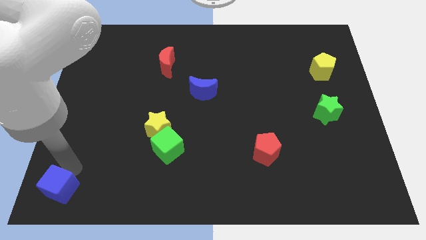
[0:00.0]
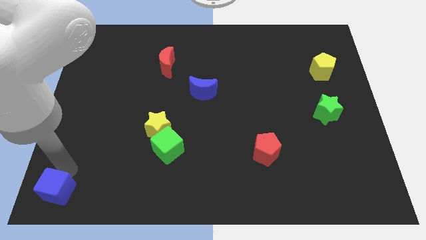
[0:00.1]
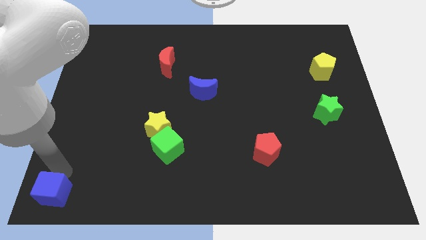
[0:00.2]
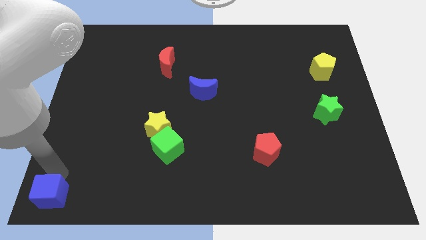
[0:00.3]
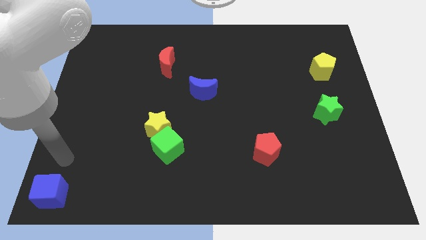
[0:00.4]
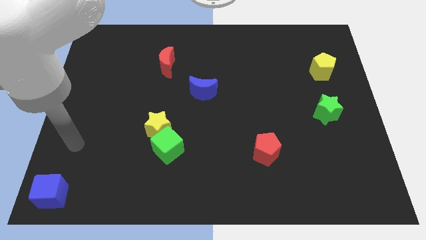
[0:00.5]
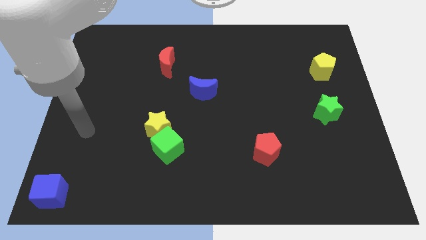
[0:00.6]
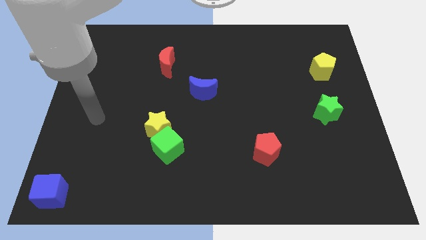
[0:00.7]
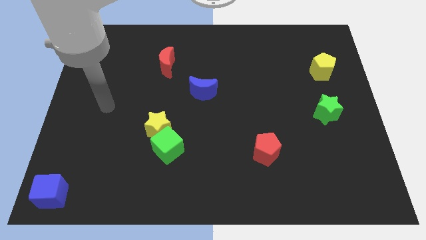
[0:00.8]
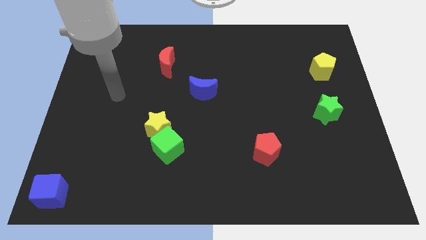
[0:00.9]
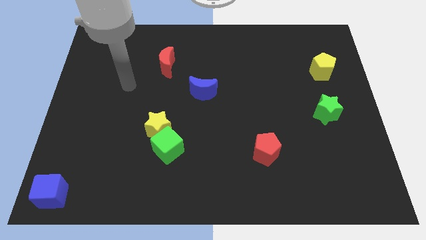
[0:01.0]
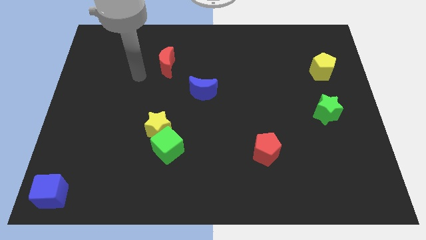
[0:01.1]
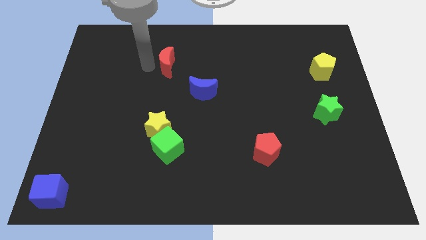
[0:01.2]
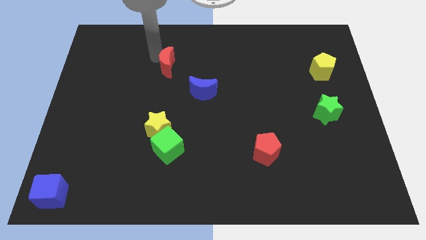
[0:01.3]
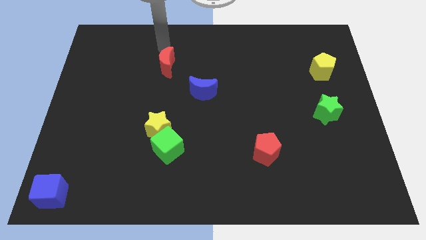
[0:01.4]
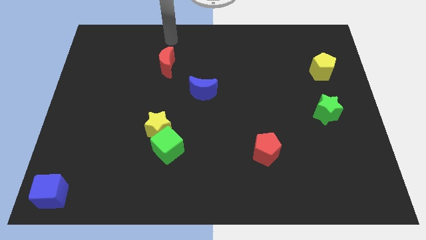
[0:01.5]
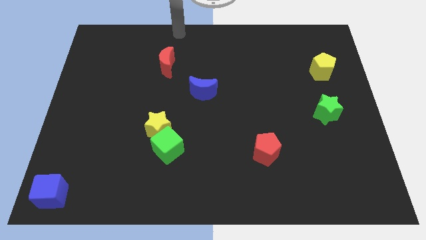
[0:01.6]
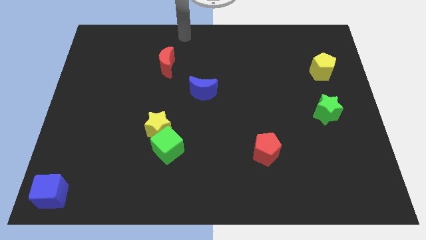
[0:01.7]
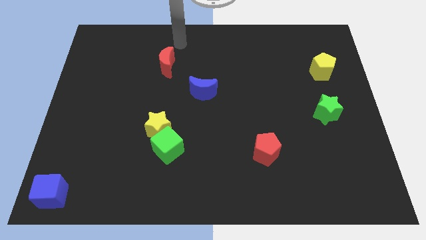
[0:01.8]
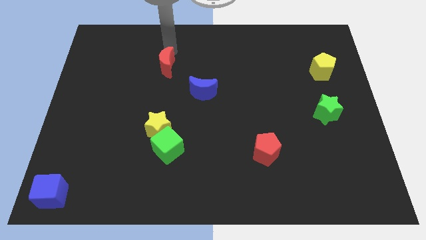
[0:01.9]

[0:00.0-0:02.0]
move your arm at the top of the red moon

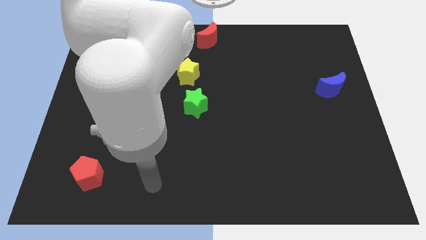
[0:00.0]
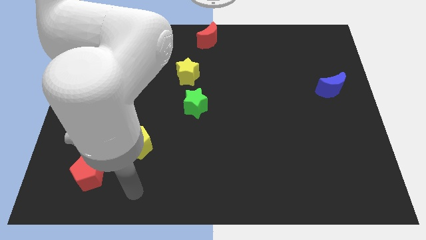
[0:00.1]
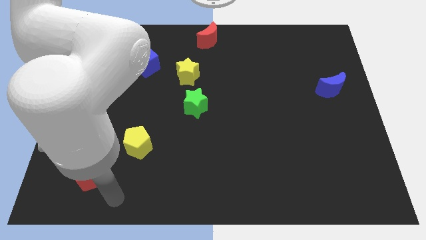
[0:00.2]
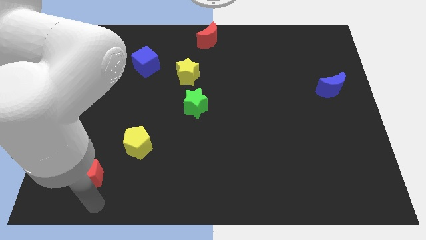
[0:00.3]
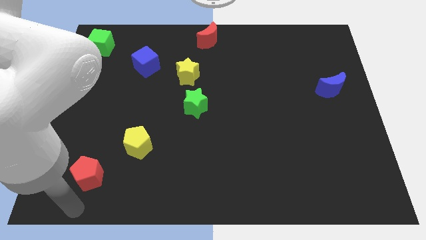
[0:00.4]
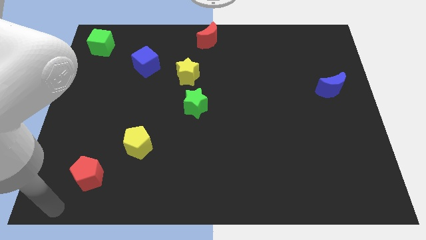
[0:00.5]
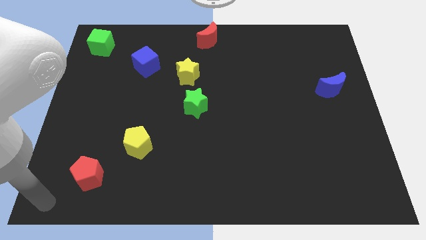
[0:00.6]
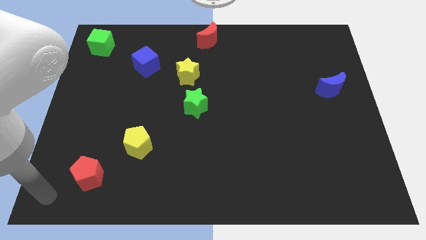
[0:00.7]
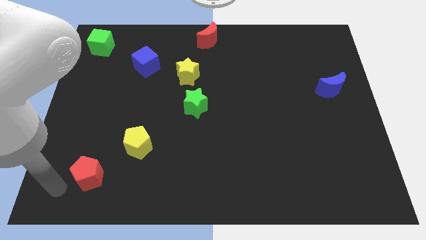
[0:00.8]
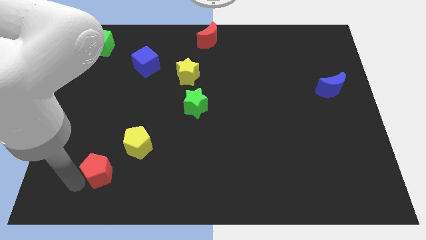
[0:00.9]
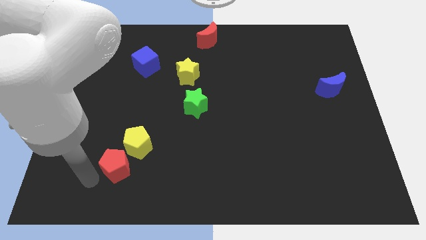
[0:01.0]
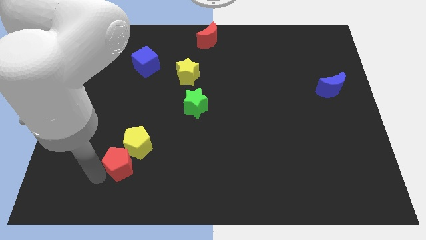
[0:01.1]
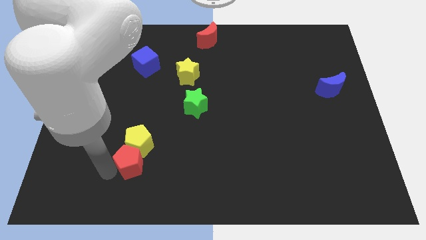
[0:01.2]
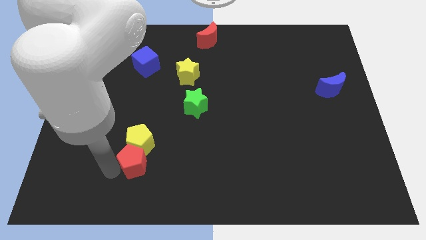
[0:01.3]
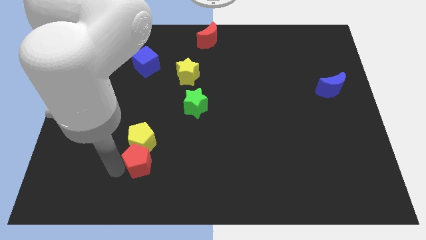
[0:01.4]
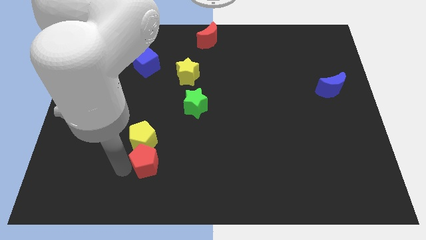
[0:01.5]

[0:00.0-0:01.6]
move the red pentagon to the bottom of the yellow pentagon

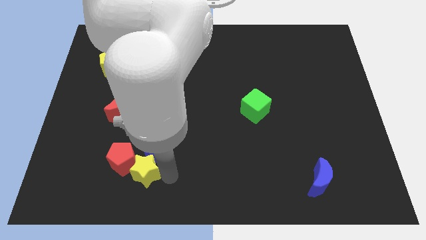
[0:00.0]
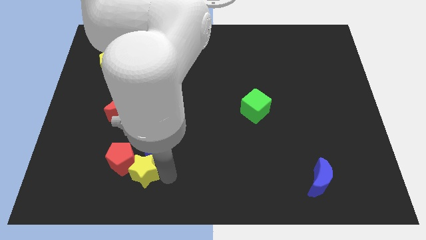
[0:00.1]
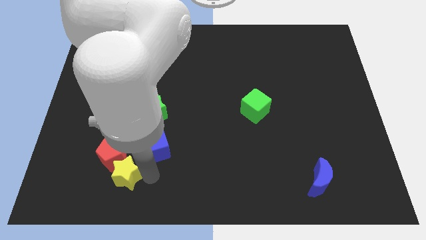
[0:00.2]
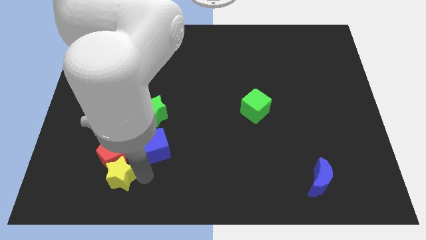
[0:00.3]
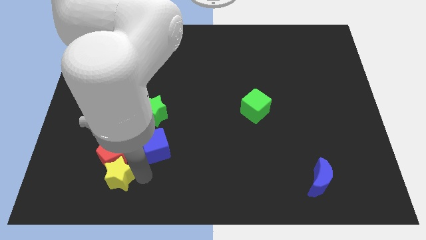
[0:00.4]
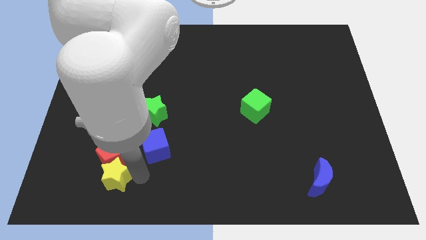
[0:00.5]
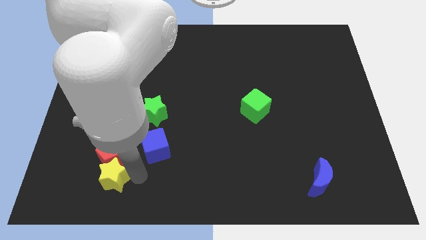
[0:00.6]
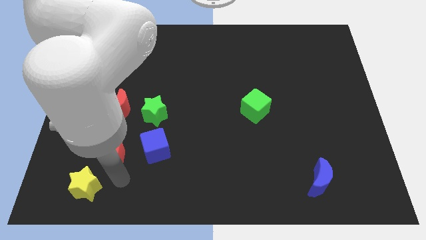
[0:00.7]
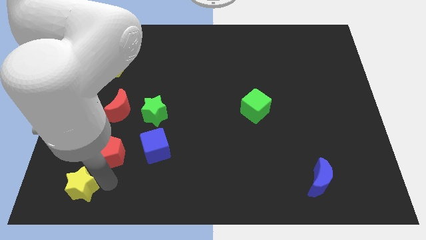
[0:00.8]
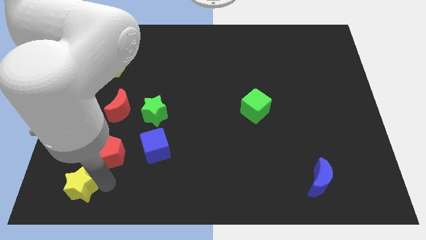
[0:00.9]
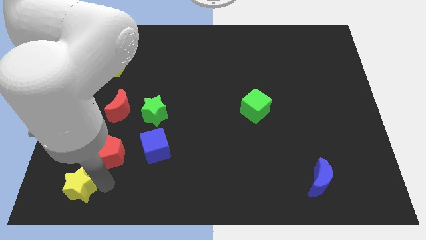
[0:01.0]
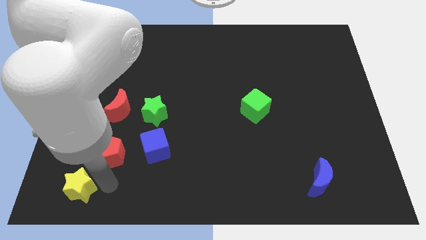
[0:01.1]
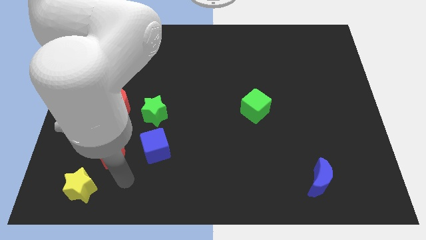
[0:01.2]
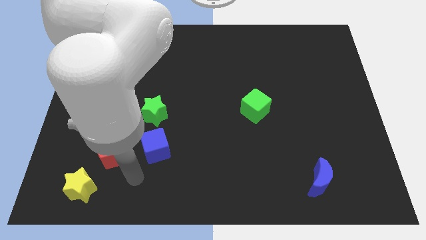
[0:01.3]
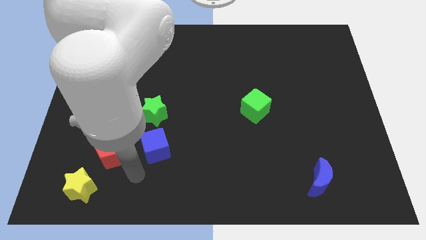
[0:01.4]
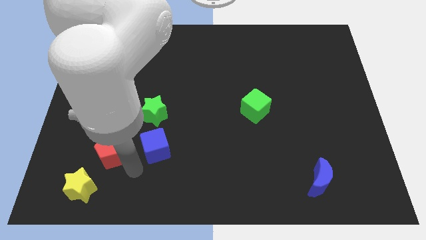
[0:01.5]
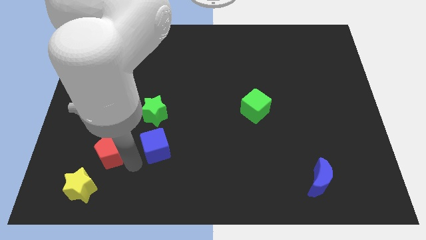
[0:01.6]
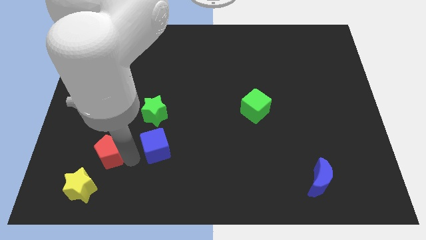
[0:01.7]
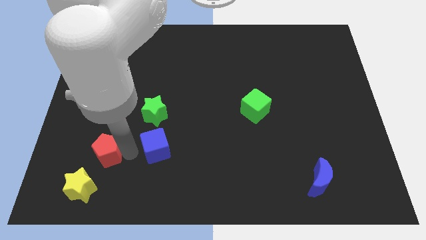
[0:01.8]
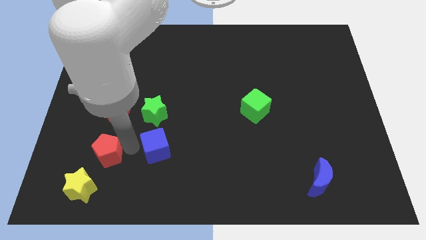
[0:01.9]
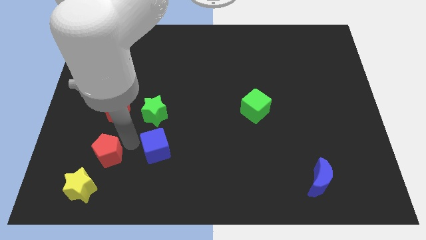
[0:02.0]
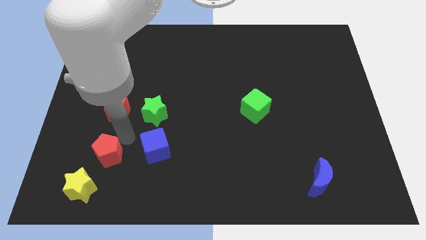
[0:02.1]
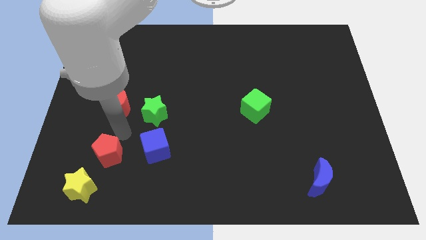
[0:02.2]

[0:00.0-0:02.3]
move the yellow star to the bottom left of the red pentagon

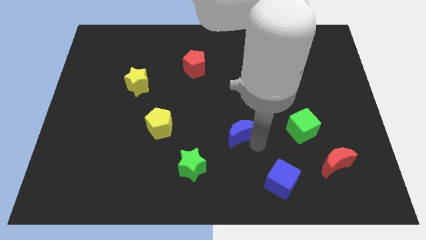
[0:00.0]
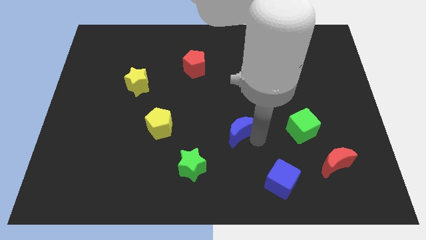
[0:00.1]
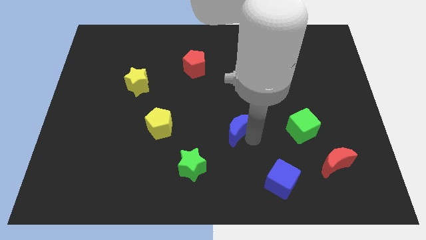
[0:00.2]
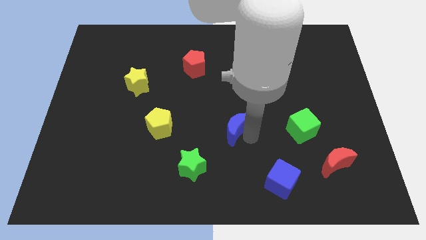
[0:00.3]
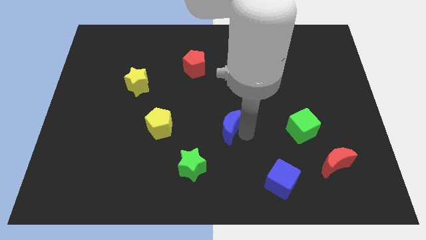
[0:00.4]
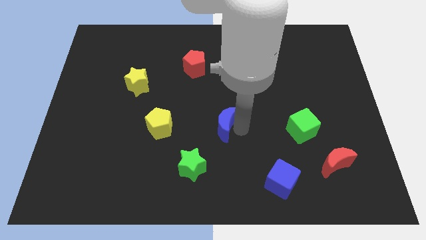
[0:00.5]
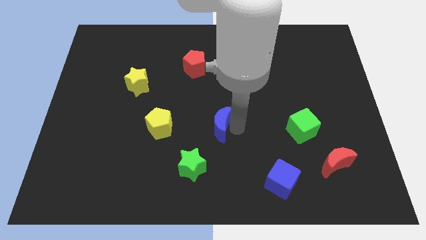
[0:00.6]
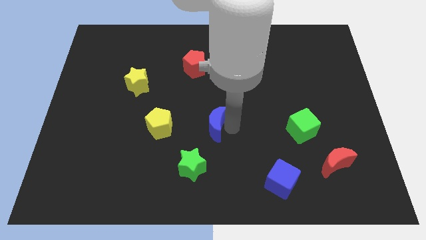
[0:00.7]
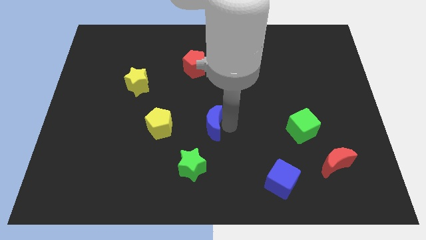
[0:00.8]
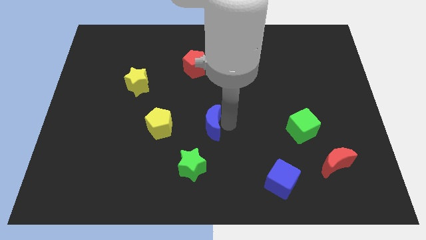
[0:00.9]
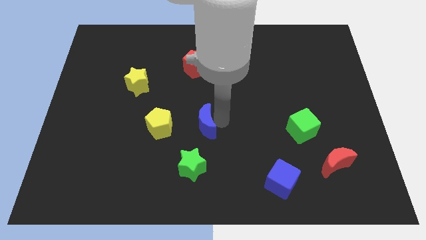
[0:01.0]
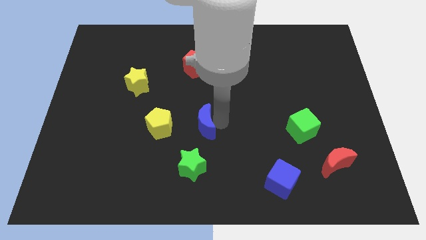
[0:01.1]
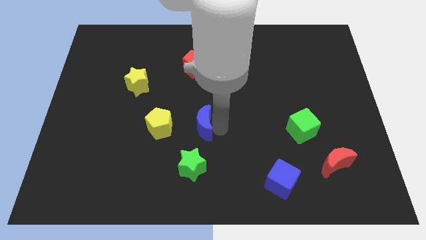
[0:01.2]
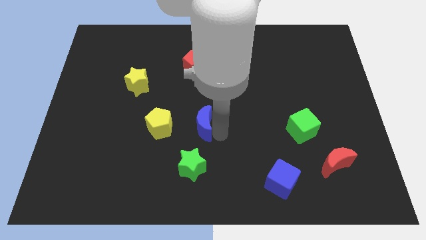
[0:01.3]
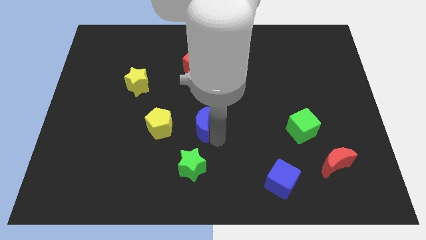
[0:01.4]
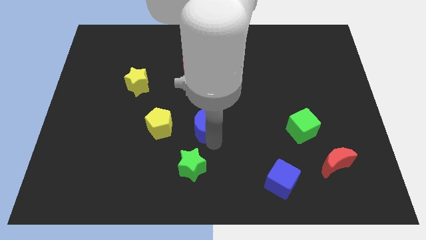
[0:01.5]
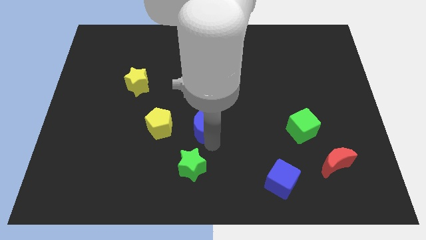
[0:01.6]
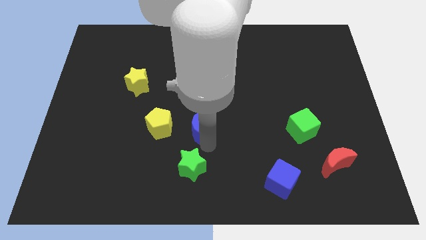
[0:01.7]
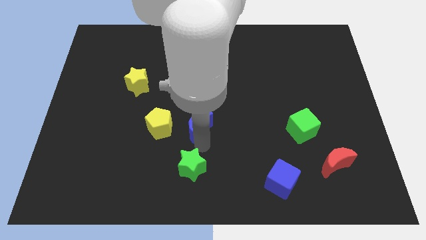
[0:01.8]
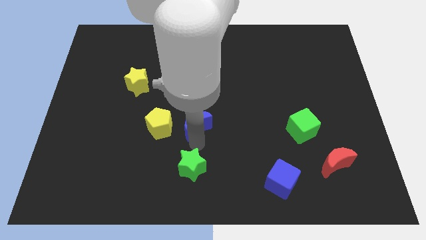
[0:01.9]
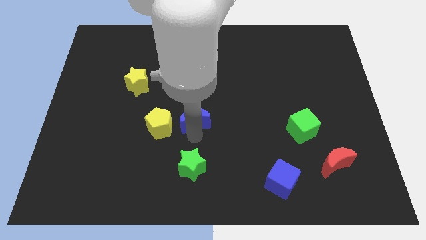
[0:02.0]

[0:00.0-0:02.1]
move the blue crescent to the right of the yellow pentagon

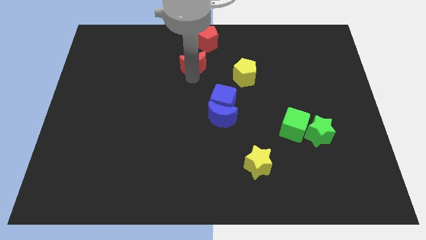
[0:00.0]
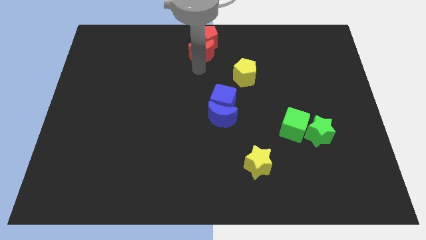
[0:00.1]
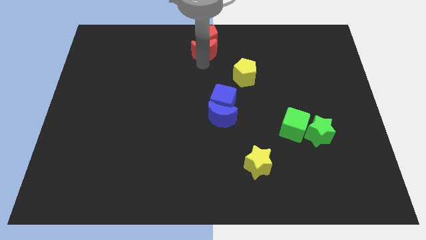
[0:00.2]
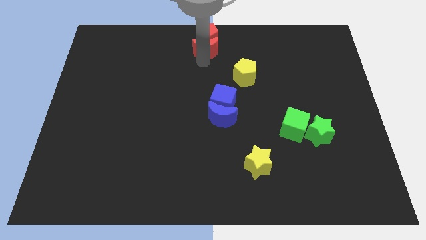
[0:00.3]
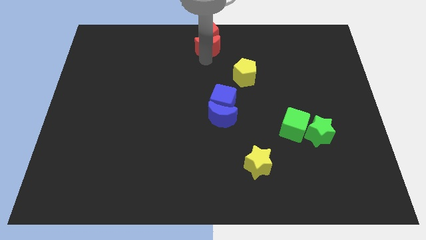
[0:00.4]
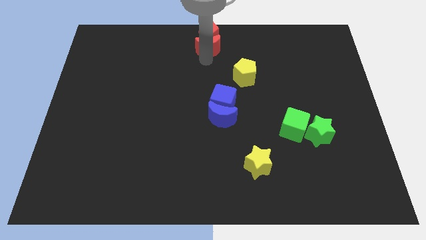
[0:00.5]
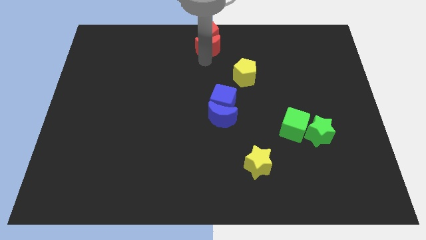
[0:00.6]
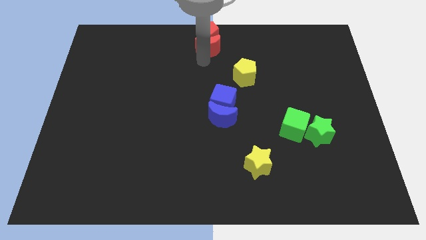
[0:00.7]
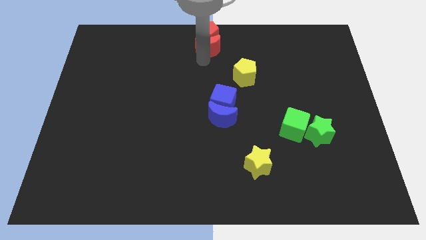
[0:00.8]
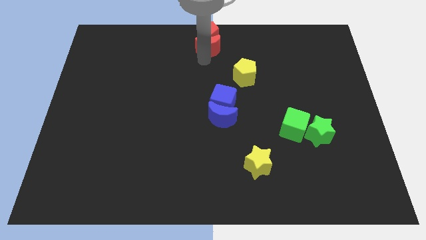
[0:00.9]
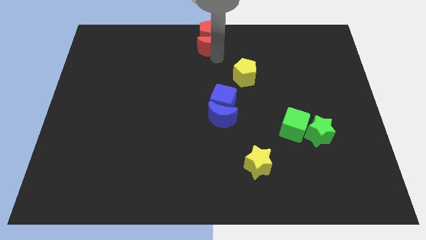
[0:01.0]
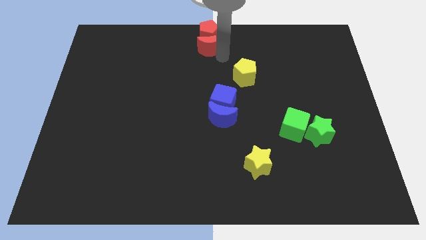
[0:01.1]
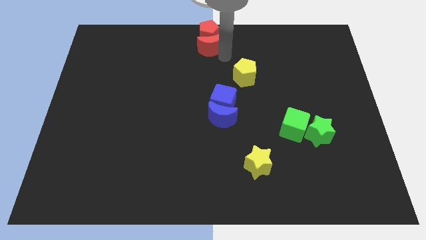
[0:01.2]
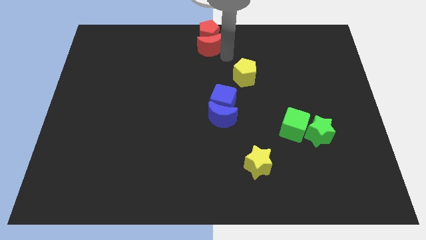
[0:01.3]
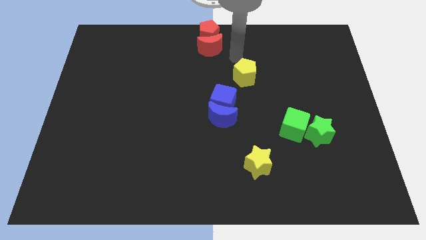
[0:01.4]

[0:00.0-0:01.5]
move red crescent and red pentagon towards the top center of the board
